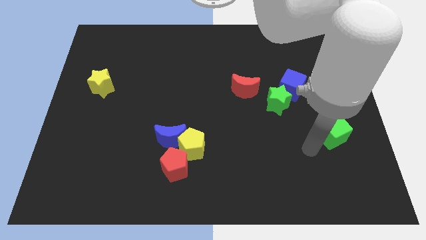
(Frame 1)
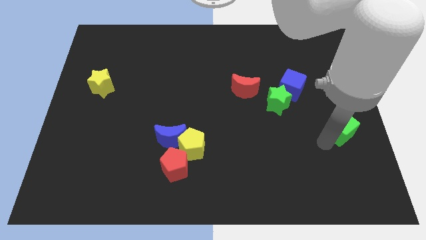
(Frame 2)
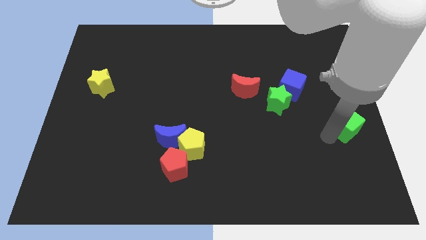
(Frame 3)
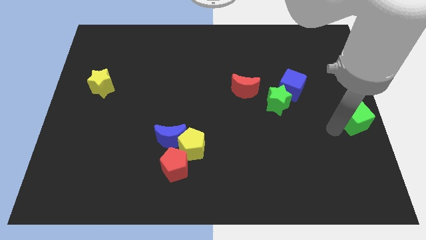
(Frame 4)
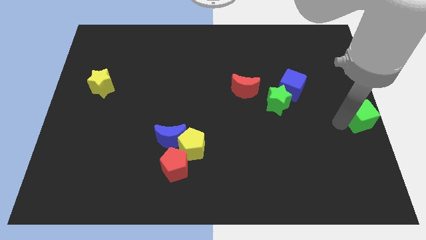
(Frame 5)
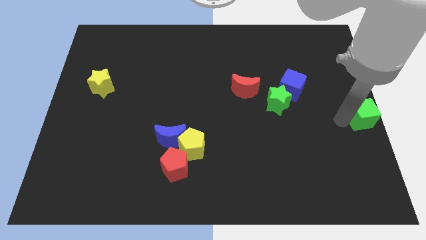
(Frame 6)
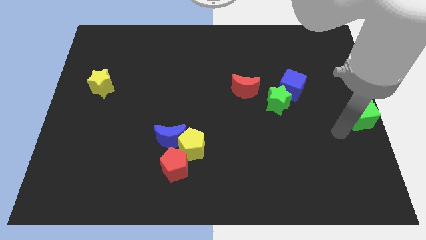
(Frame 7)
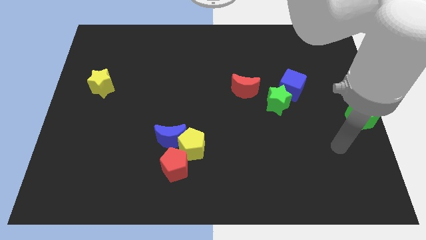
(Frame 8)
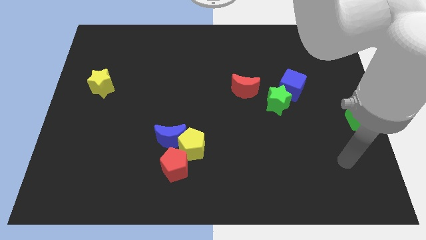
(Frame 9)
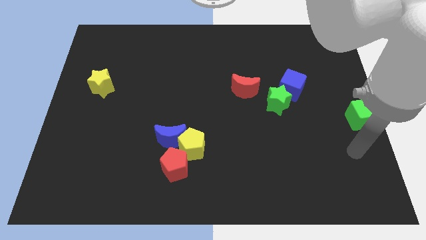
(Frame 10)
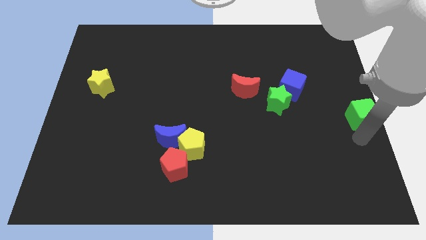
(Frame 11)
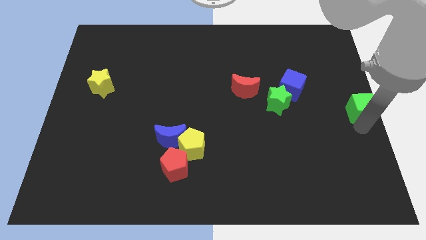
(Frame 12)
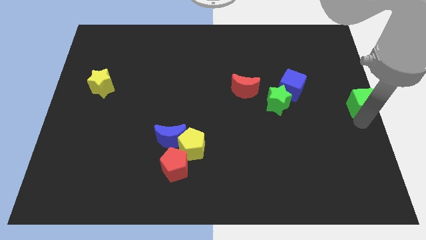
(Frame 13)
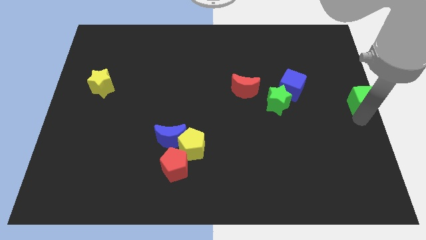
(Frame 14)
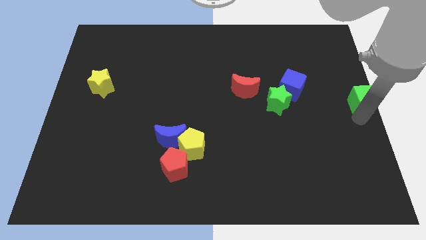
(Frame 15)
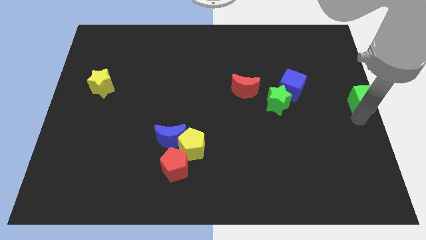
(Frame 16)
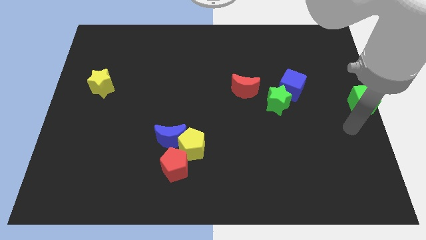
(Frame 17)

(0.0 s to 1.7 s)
move the green cube to the right center of the board

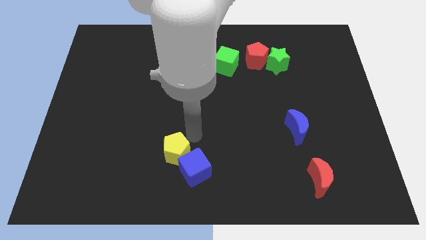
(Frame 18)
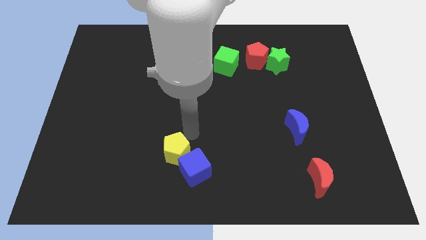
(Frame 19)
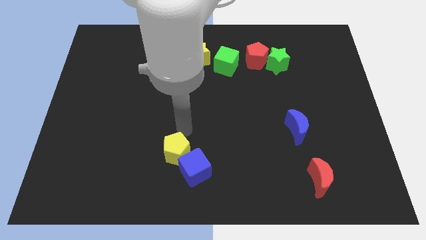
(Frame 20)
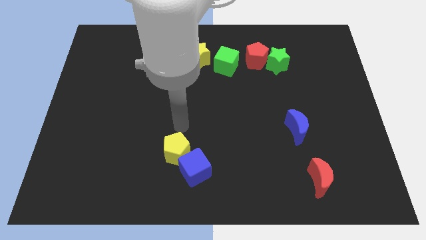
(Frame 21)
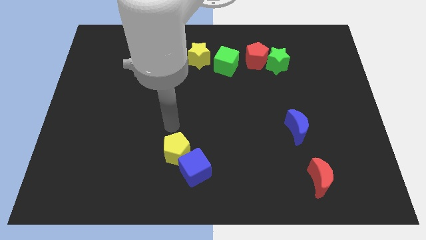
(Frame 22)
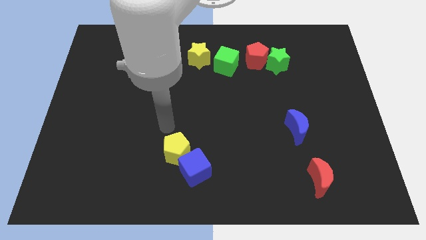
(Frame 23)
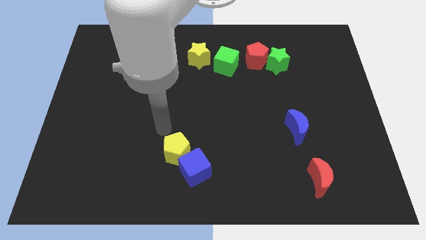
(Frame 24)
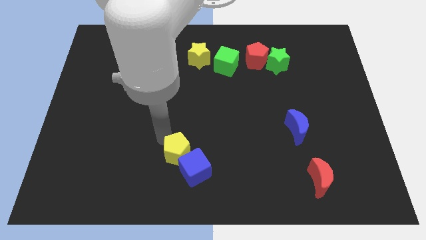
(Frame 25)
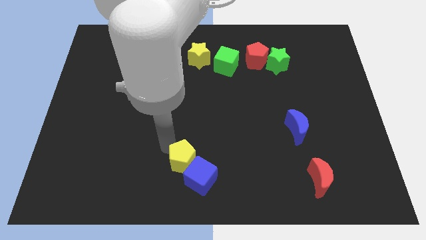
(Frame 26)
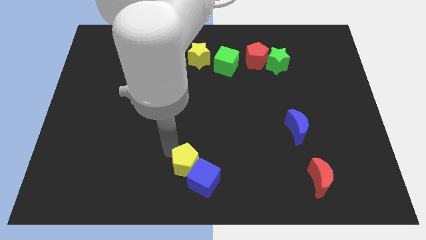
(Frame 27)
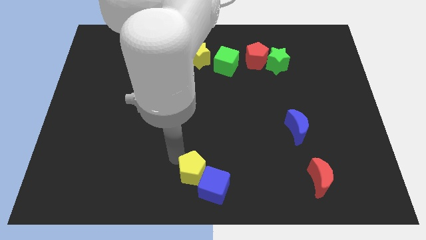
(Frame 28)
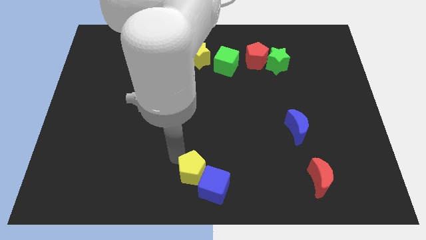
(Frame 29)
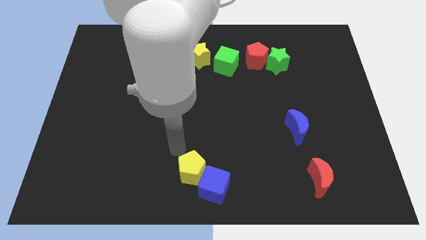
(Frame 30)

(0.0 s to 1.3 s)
push the yellow pentagon into the blue cube

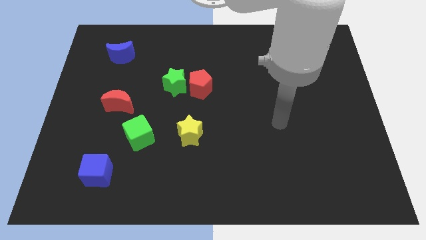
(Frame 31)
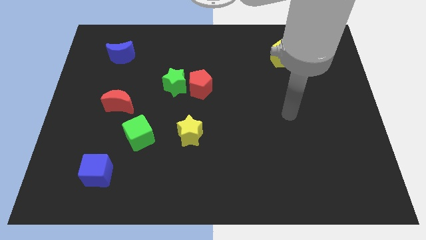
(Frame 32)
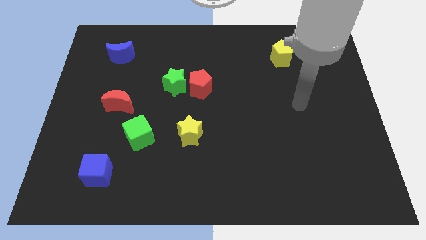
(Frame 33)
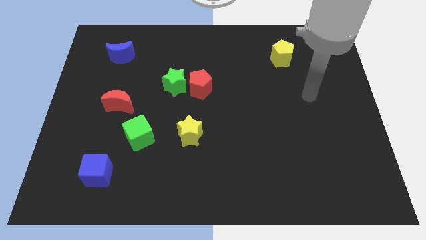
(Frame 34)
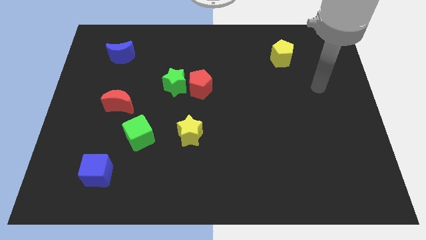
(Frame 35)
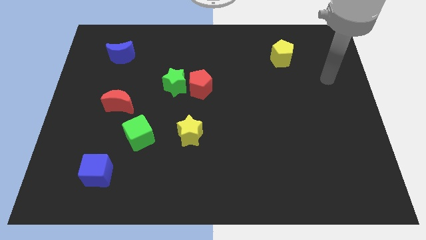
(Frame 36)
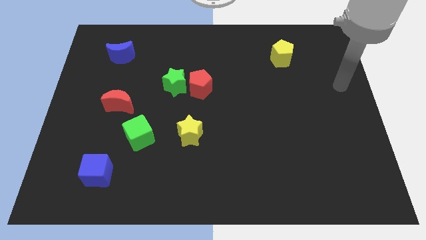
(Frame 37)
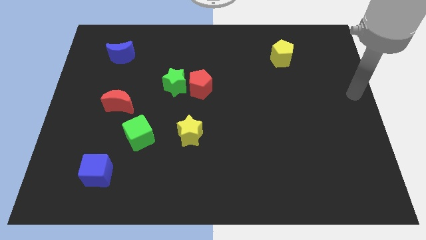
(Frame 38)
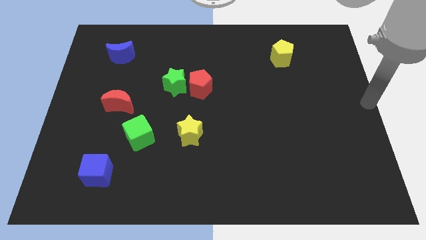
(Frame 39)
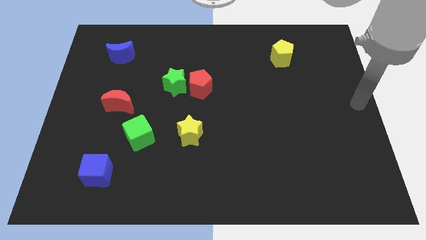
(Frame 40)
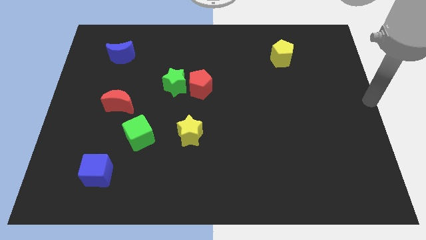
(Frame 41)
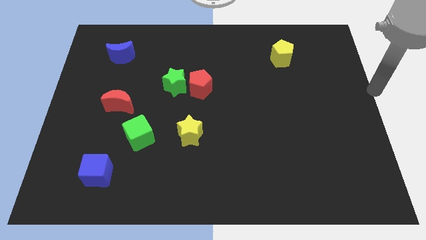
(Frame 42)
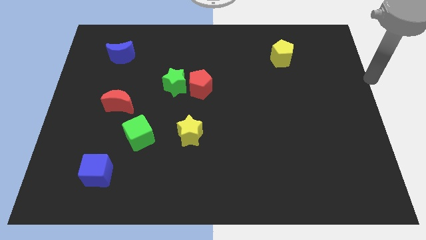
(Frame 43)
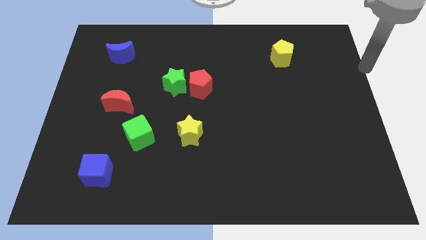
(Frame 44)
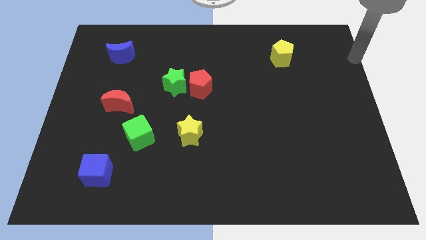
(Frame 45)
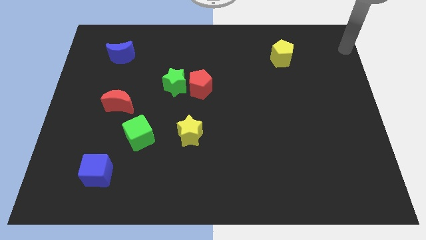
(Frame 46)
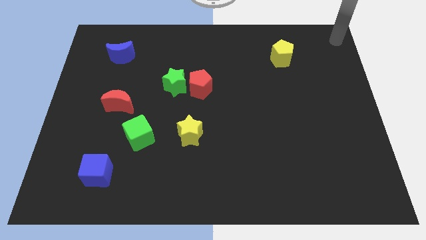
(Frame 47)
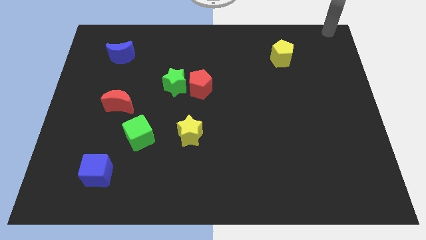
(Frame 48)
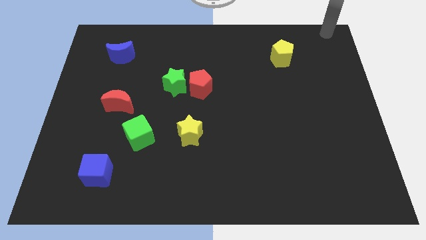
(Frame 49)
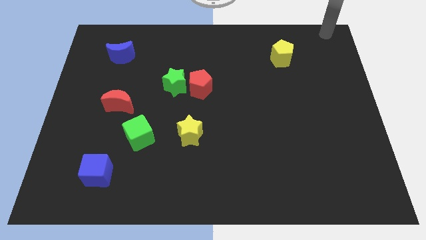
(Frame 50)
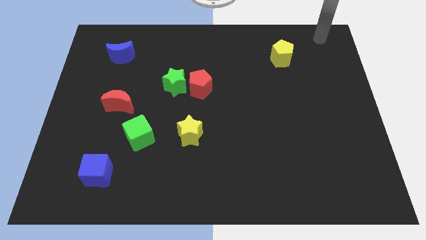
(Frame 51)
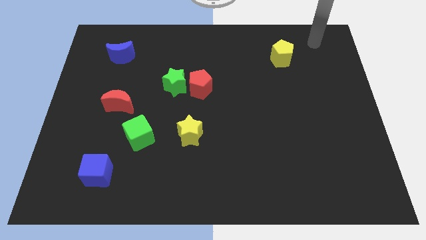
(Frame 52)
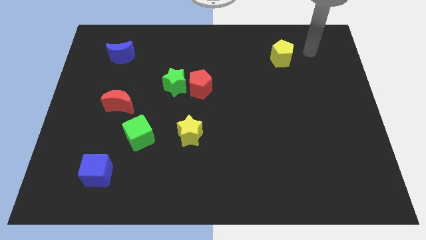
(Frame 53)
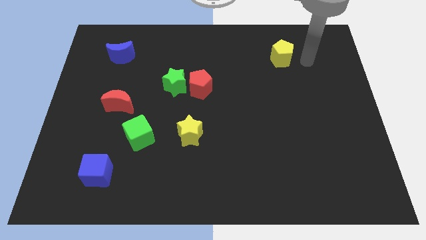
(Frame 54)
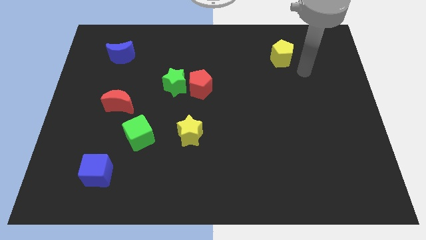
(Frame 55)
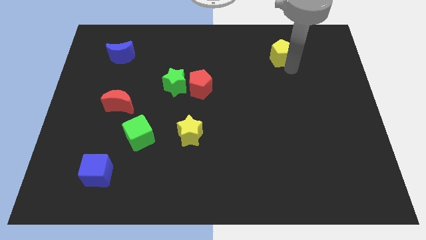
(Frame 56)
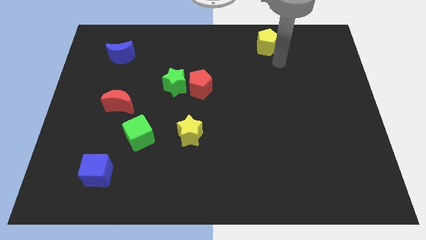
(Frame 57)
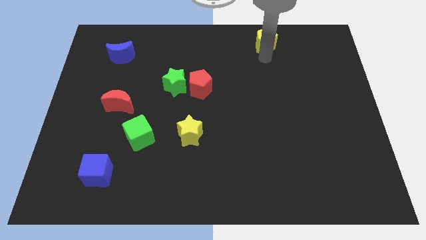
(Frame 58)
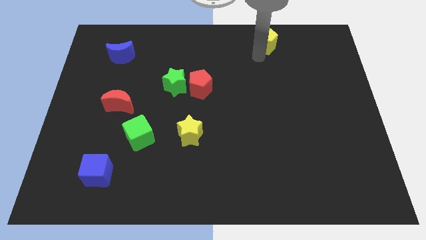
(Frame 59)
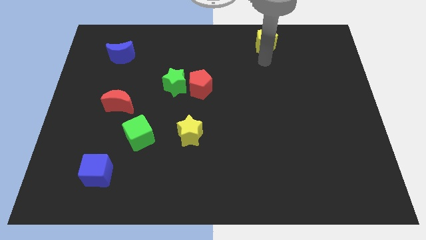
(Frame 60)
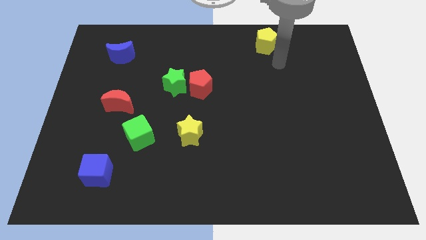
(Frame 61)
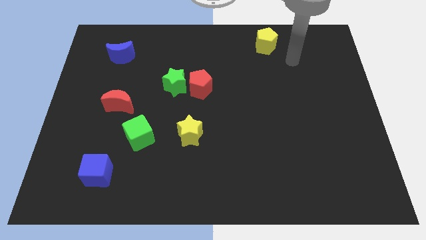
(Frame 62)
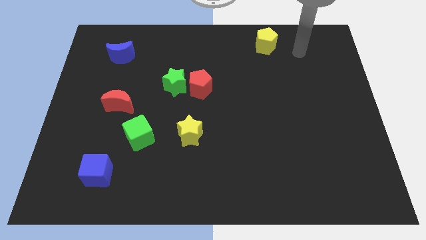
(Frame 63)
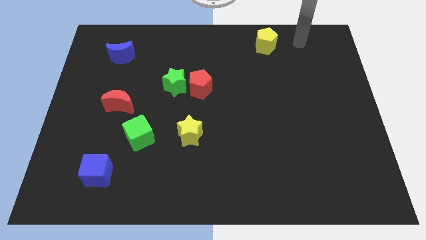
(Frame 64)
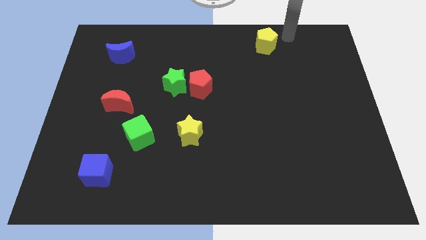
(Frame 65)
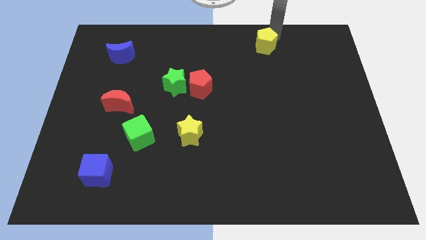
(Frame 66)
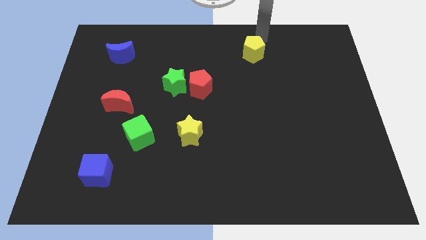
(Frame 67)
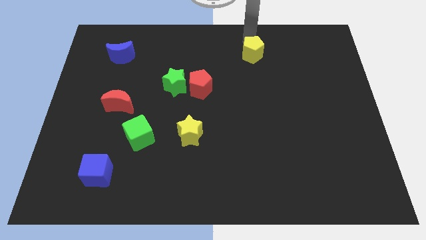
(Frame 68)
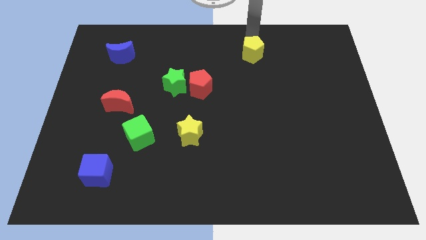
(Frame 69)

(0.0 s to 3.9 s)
push the yellow pentagon up slightly

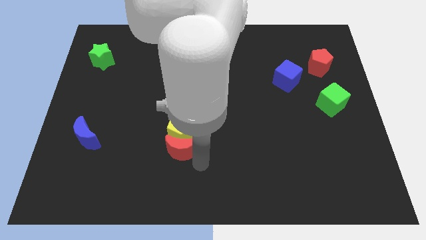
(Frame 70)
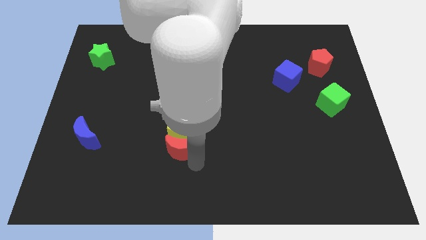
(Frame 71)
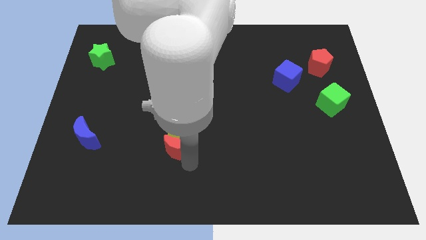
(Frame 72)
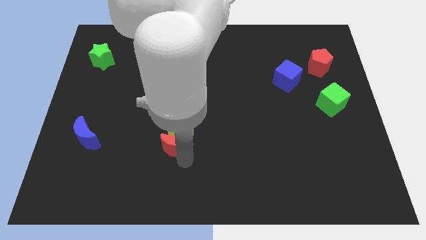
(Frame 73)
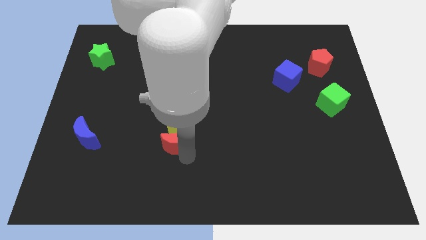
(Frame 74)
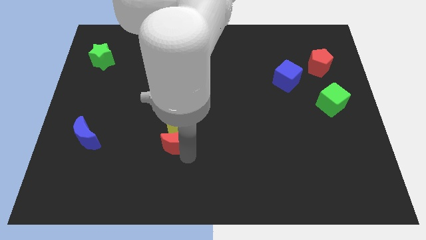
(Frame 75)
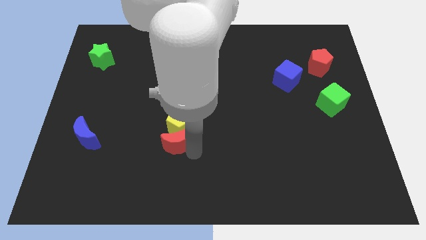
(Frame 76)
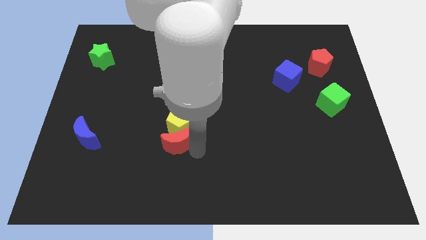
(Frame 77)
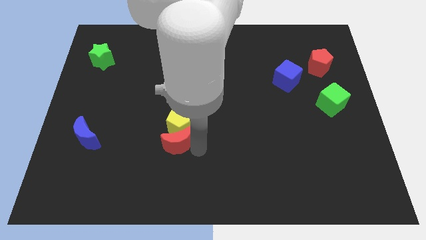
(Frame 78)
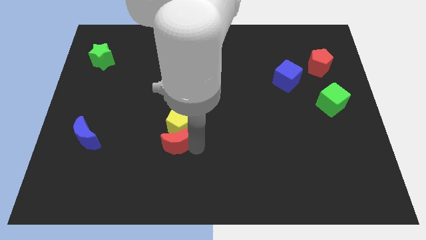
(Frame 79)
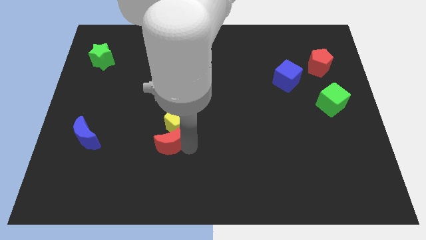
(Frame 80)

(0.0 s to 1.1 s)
push the red moon towards the yellow pentagon

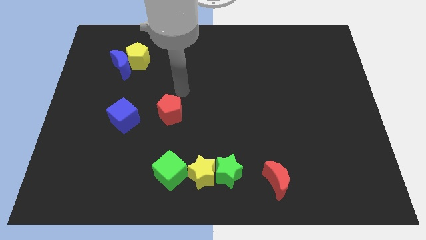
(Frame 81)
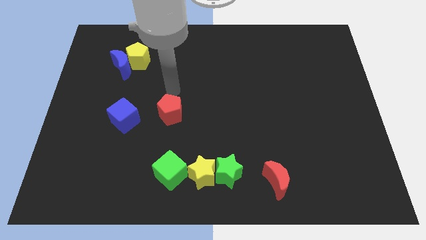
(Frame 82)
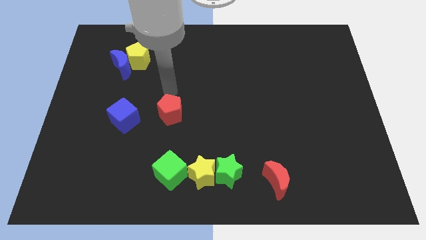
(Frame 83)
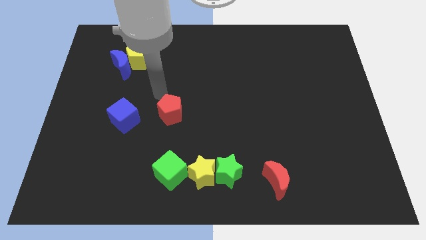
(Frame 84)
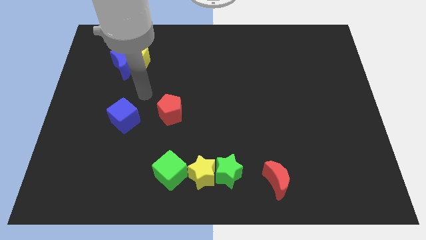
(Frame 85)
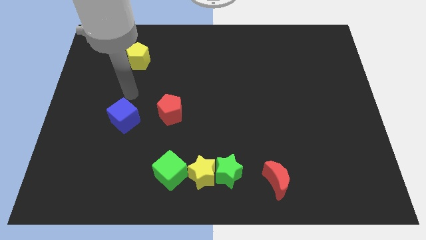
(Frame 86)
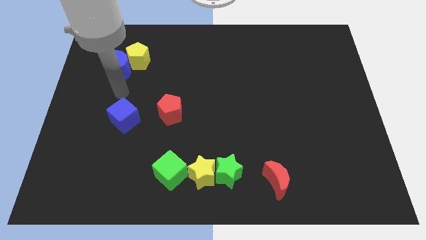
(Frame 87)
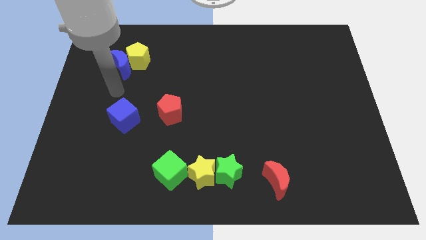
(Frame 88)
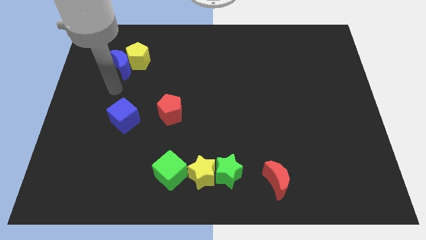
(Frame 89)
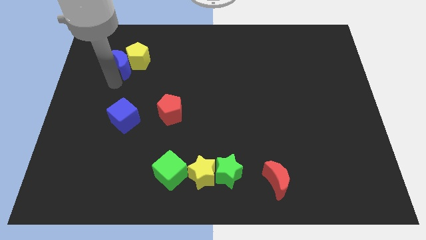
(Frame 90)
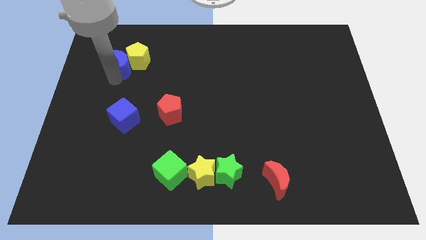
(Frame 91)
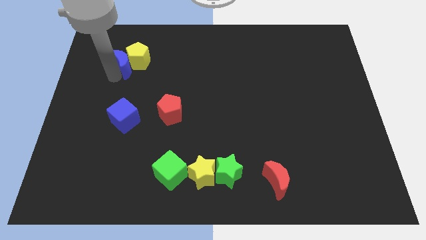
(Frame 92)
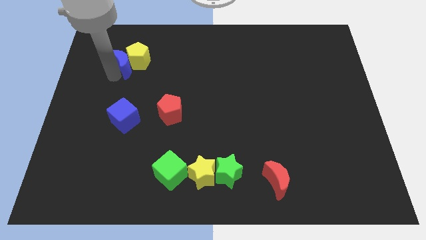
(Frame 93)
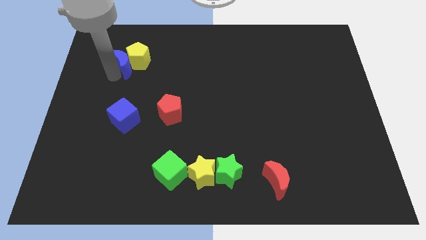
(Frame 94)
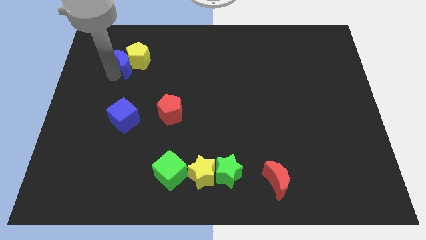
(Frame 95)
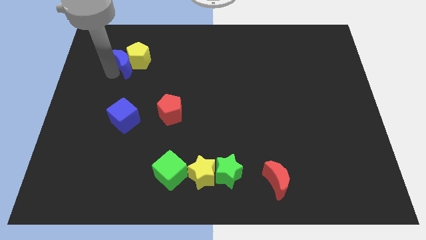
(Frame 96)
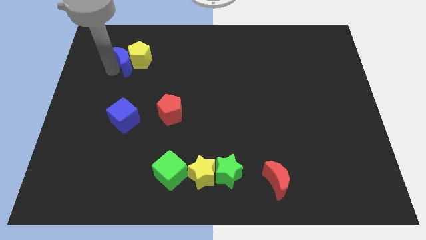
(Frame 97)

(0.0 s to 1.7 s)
touch the left side of the blue moon
